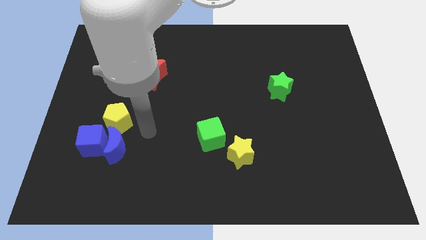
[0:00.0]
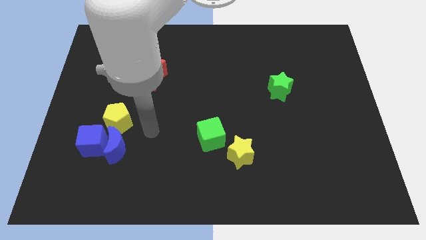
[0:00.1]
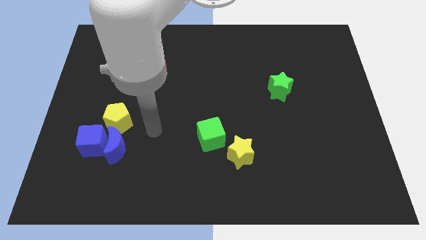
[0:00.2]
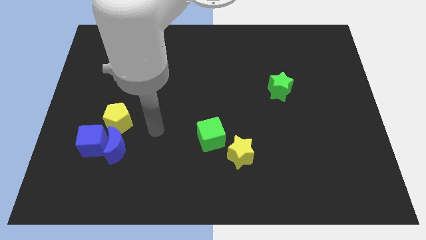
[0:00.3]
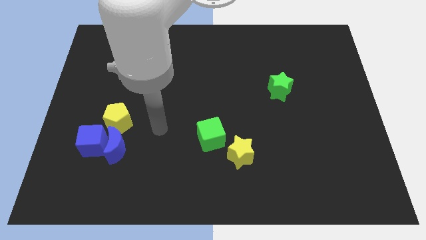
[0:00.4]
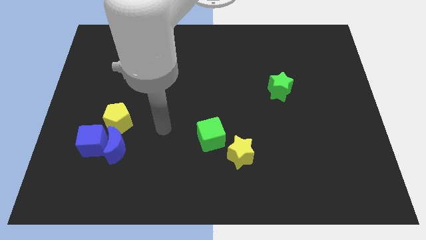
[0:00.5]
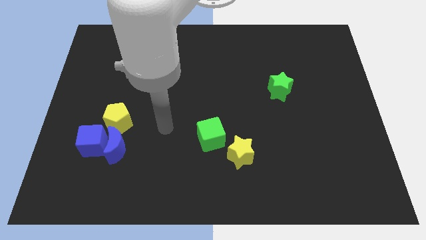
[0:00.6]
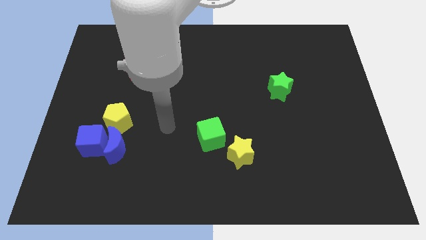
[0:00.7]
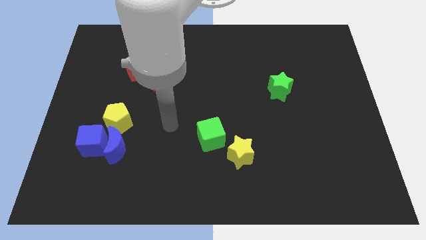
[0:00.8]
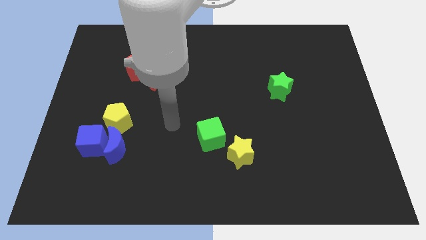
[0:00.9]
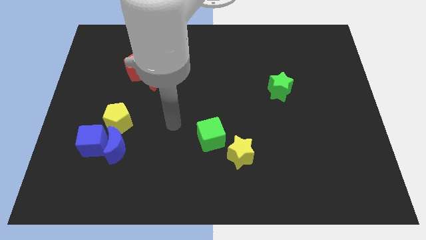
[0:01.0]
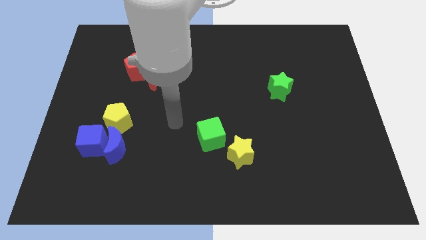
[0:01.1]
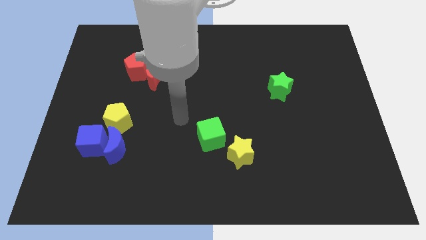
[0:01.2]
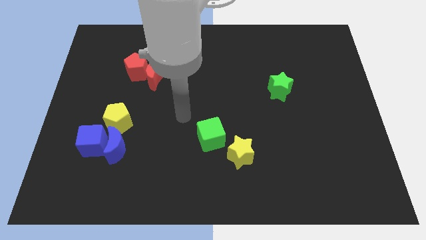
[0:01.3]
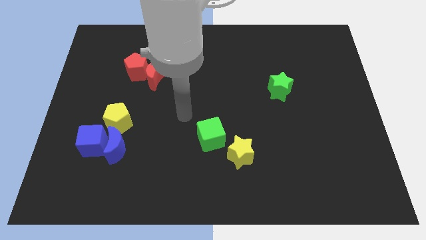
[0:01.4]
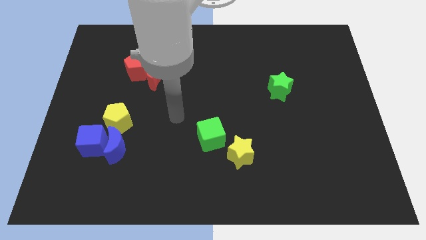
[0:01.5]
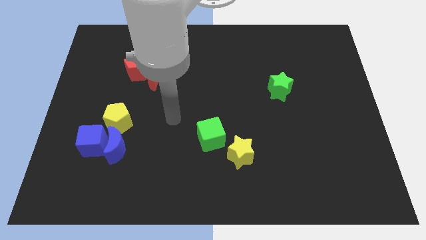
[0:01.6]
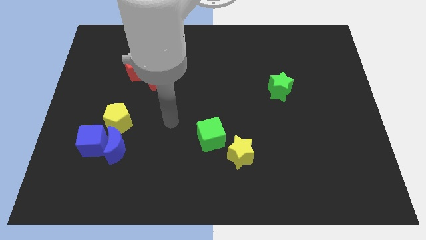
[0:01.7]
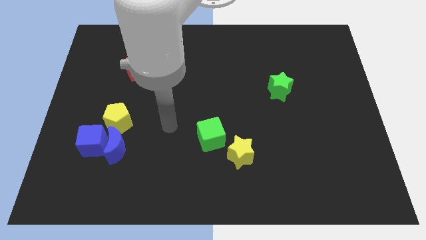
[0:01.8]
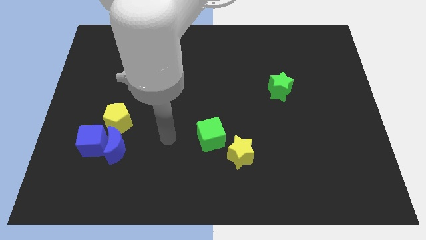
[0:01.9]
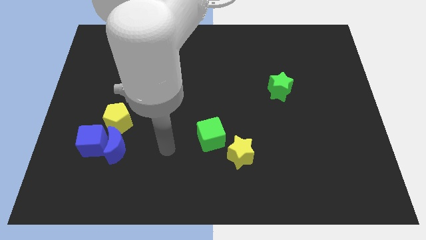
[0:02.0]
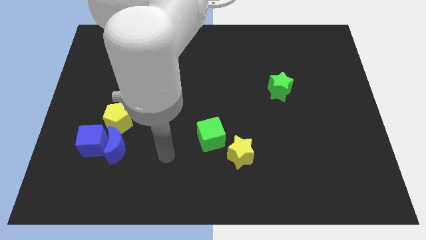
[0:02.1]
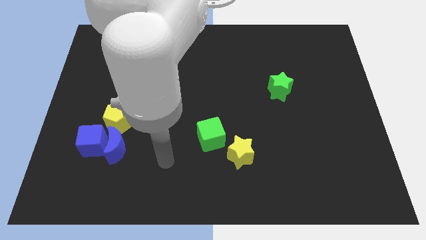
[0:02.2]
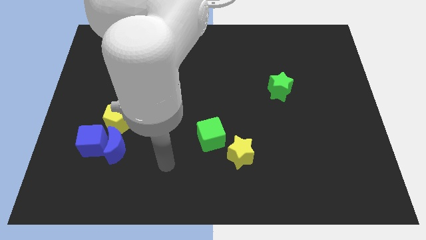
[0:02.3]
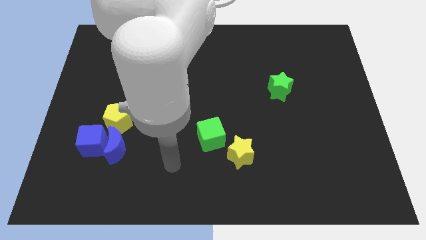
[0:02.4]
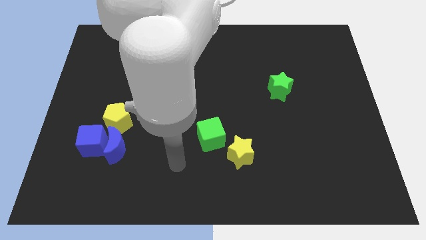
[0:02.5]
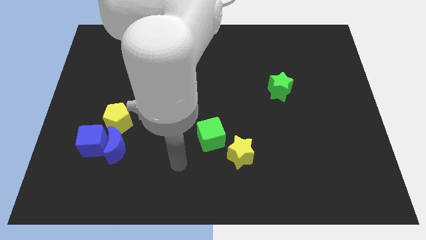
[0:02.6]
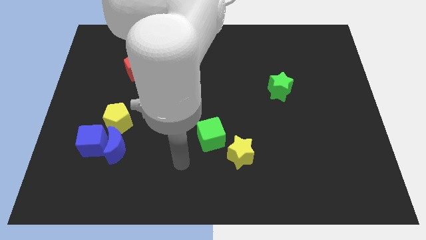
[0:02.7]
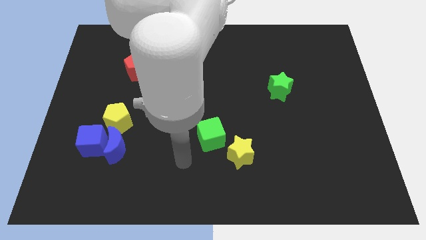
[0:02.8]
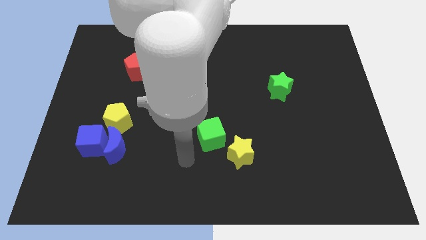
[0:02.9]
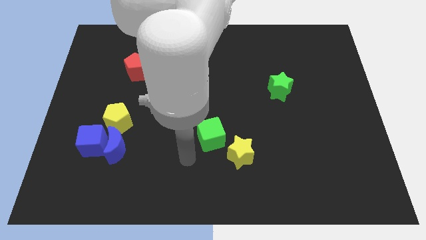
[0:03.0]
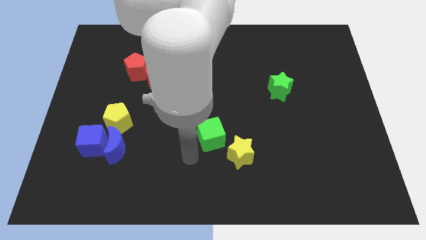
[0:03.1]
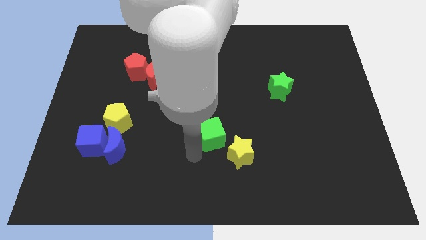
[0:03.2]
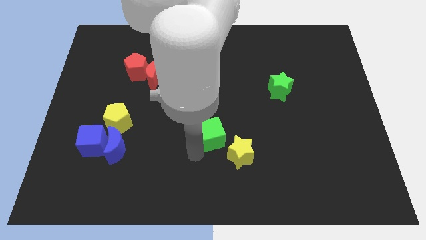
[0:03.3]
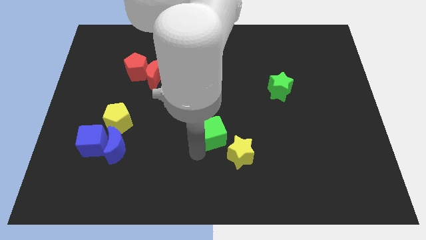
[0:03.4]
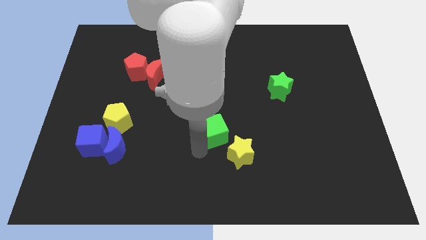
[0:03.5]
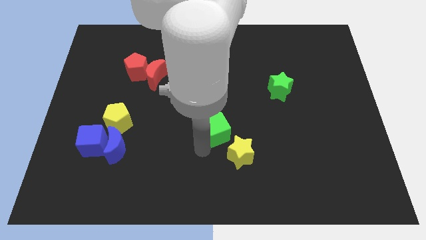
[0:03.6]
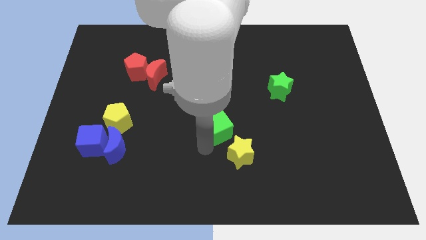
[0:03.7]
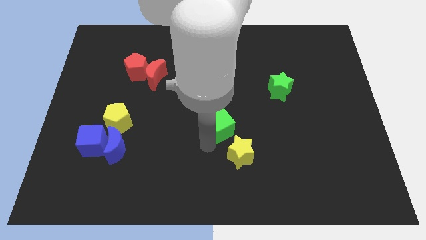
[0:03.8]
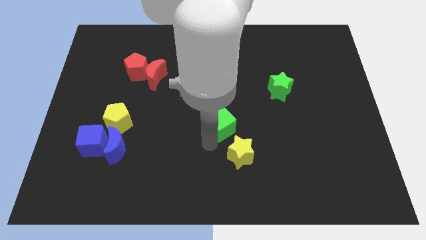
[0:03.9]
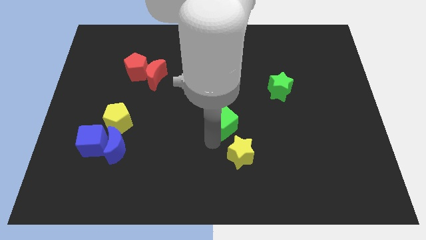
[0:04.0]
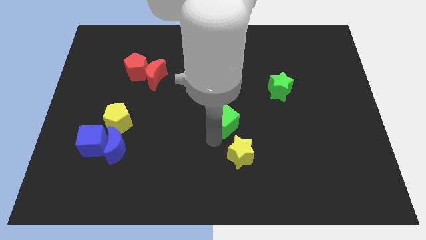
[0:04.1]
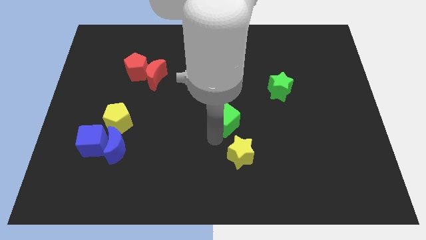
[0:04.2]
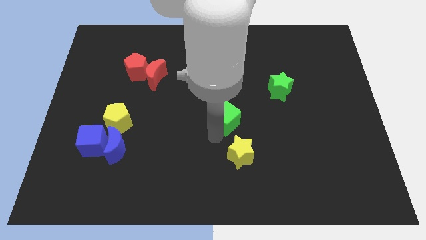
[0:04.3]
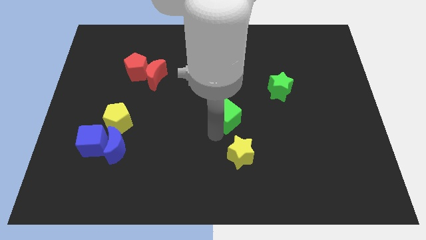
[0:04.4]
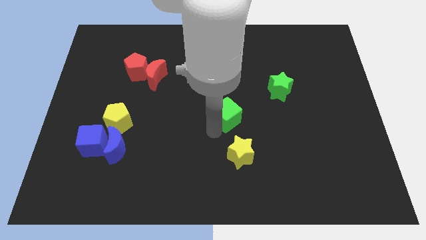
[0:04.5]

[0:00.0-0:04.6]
move green cube slightly up

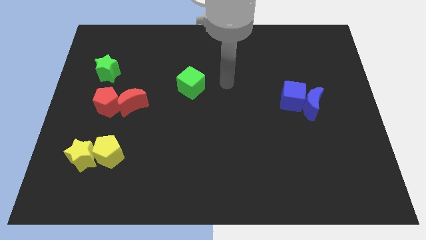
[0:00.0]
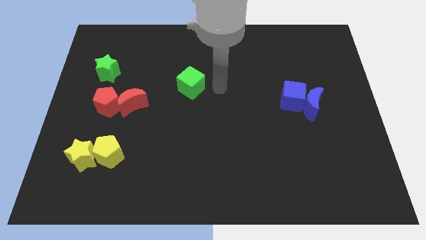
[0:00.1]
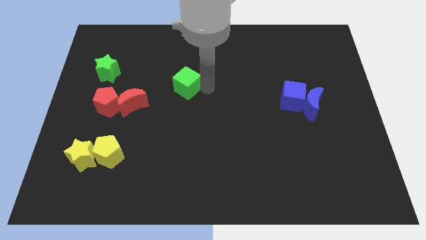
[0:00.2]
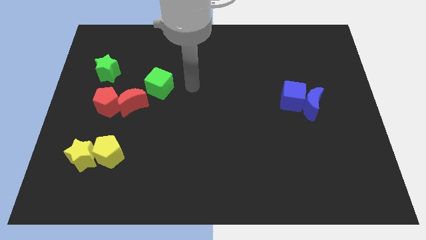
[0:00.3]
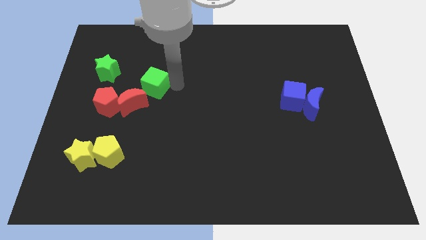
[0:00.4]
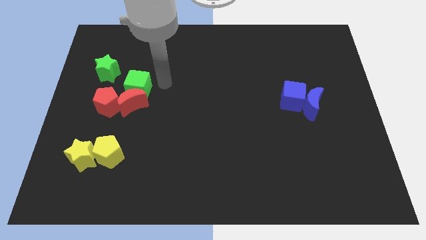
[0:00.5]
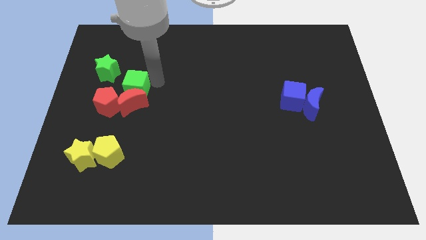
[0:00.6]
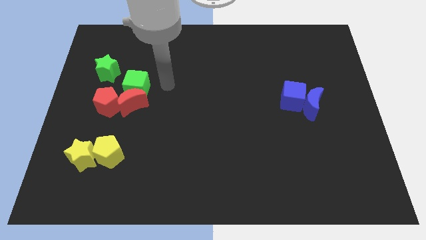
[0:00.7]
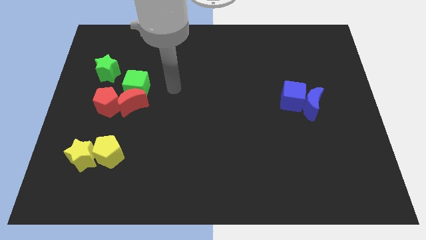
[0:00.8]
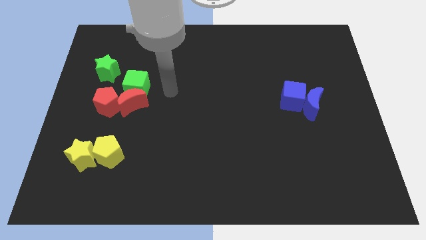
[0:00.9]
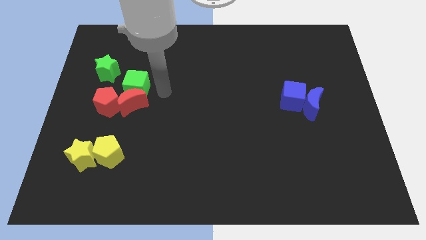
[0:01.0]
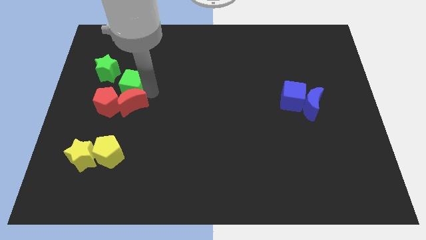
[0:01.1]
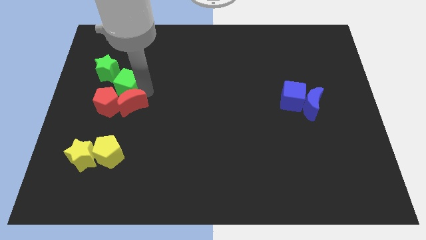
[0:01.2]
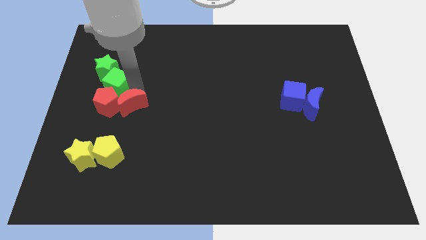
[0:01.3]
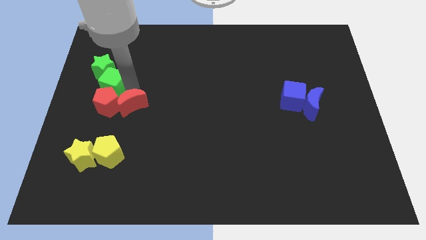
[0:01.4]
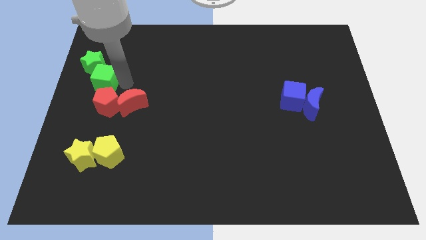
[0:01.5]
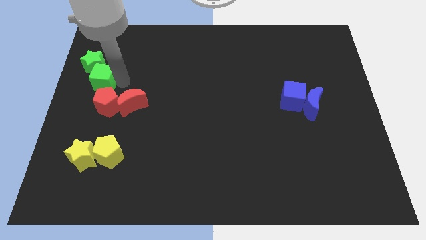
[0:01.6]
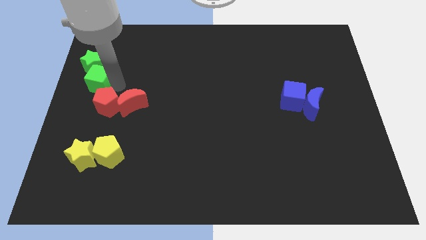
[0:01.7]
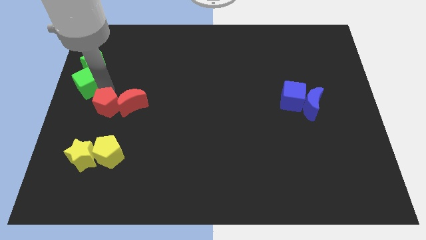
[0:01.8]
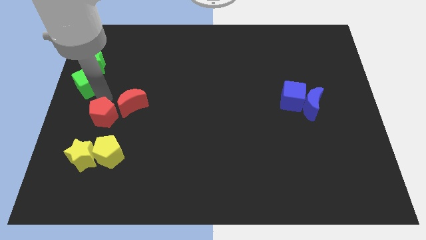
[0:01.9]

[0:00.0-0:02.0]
put the green cube vertically below the green star

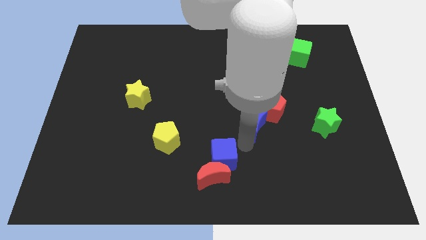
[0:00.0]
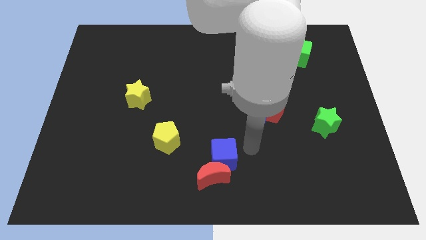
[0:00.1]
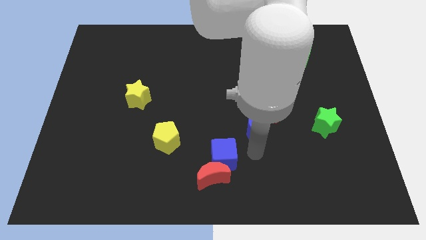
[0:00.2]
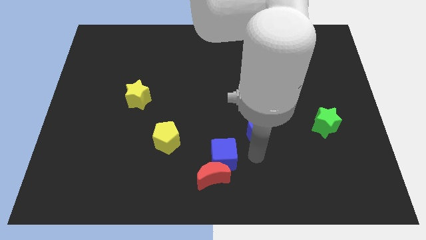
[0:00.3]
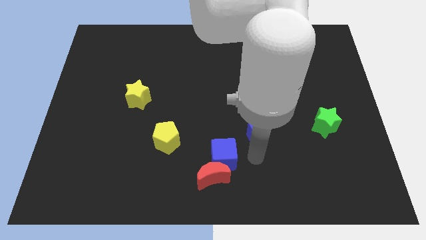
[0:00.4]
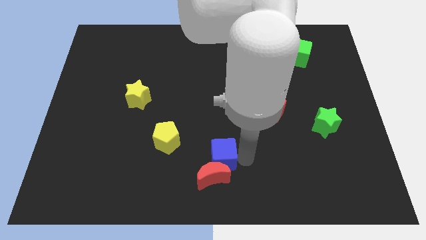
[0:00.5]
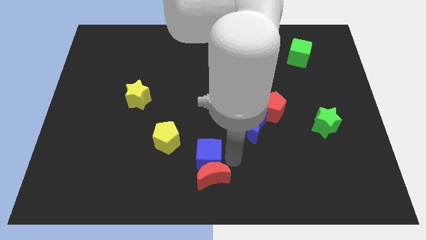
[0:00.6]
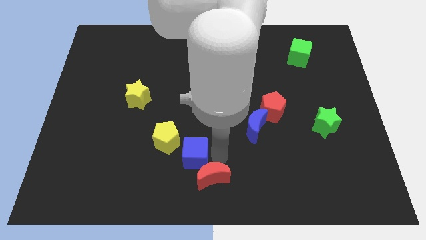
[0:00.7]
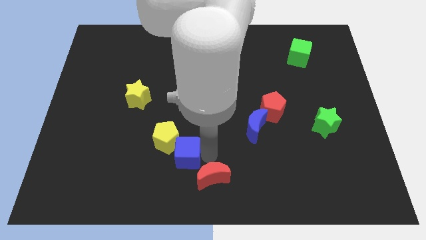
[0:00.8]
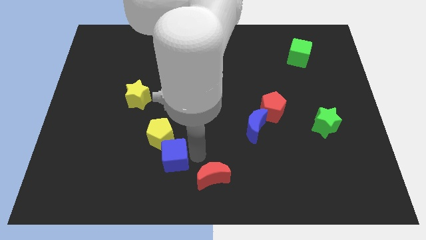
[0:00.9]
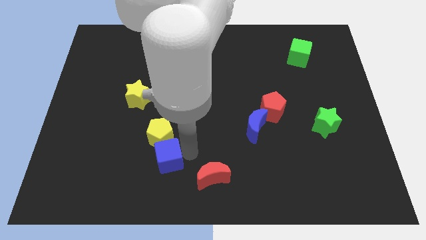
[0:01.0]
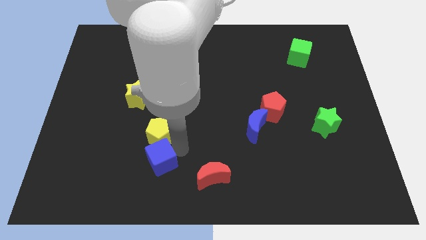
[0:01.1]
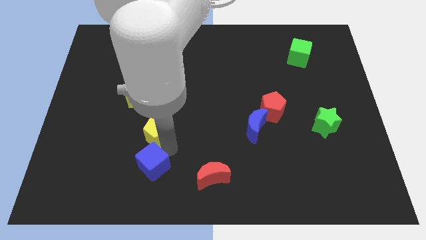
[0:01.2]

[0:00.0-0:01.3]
push the blue cube below to the yellow pentagon

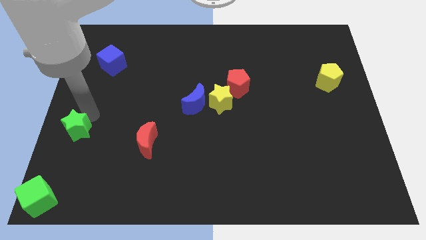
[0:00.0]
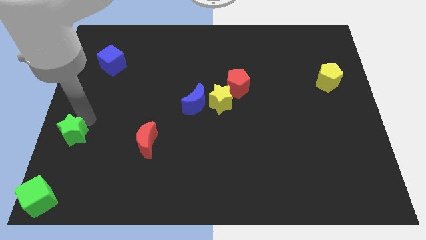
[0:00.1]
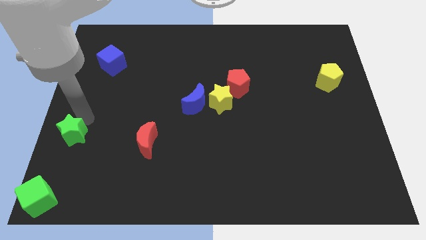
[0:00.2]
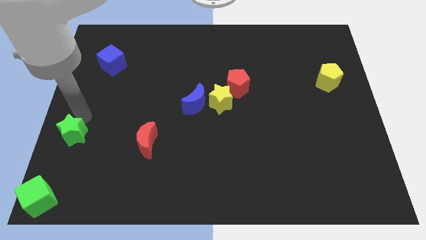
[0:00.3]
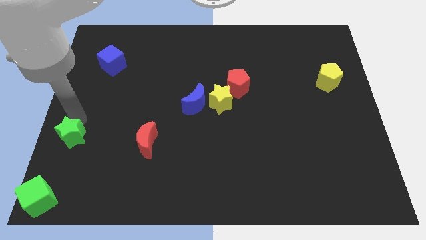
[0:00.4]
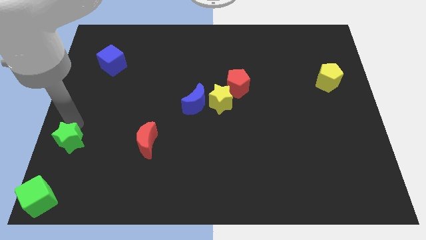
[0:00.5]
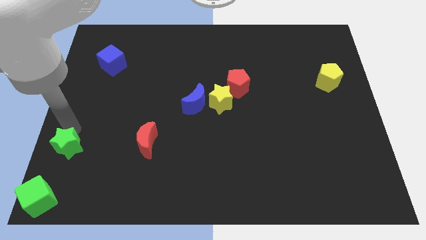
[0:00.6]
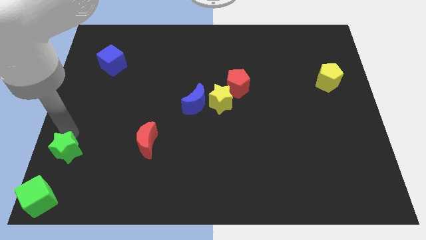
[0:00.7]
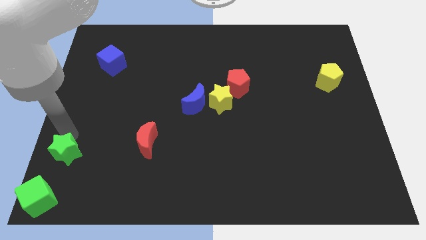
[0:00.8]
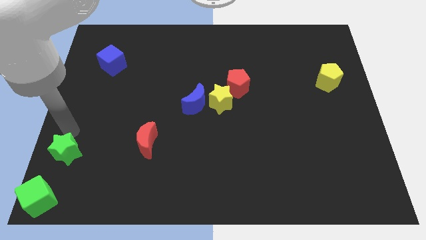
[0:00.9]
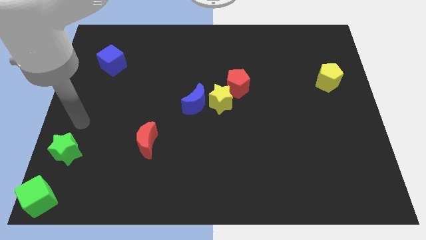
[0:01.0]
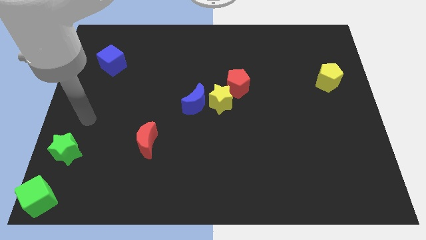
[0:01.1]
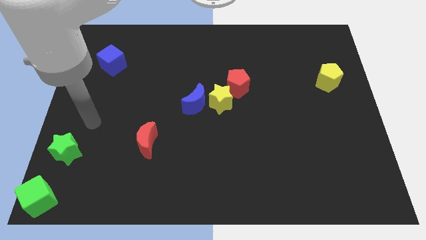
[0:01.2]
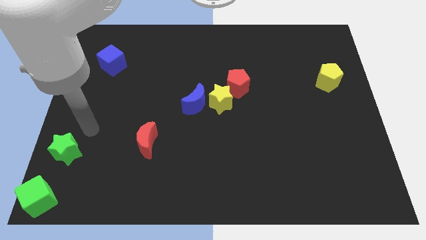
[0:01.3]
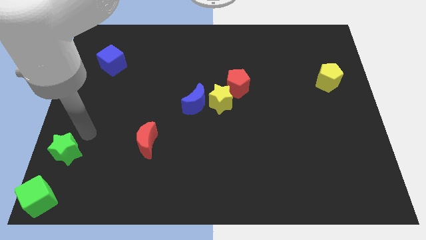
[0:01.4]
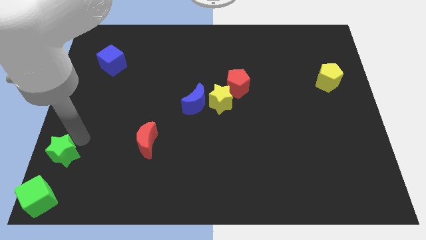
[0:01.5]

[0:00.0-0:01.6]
move green star towards green cube
